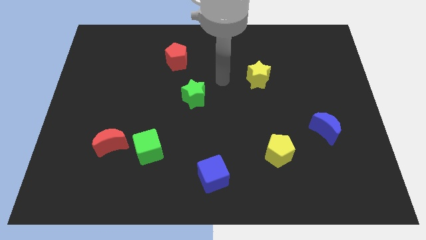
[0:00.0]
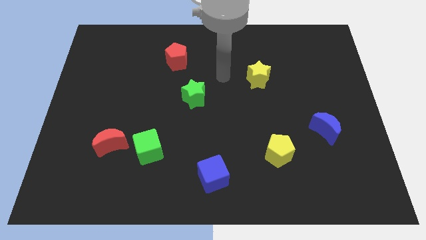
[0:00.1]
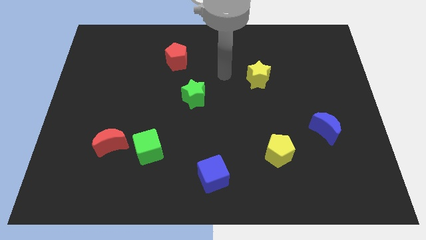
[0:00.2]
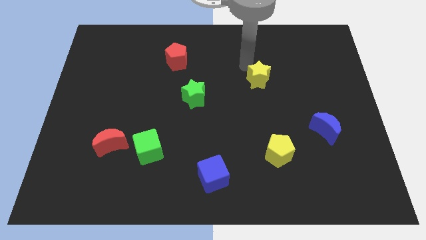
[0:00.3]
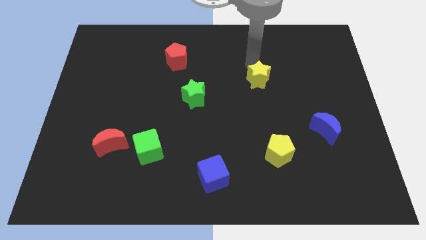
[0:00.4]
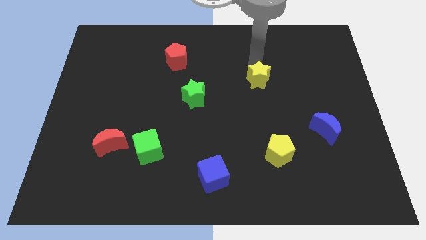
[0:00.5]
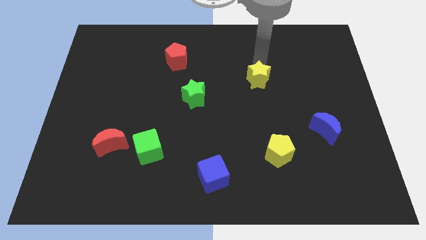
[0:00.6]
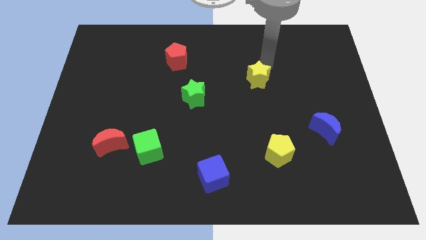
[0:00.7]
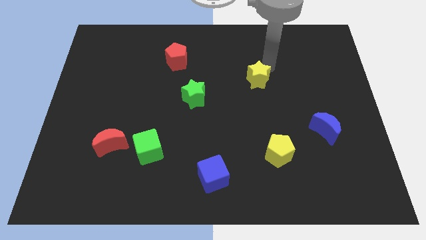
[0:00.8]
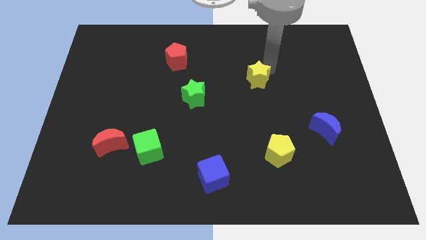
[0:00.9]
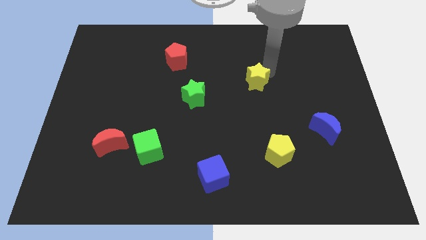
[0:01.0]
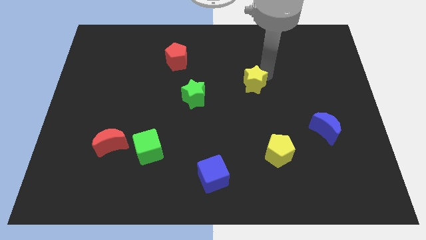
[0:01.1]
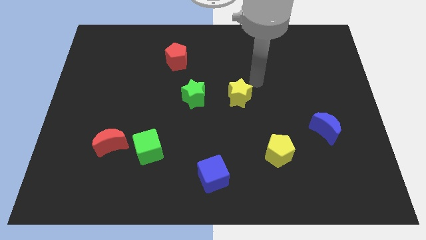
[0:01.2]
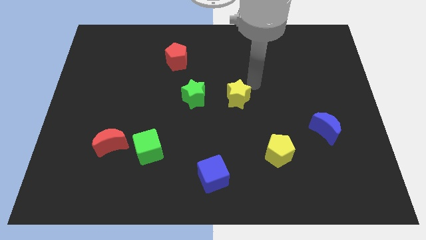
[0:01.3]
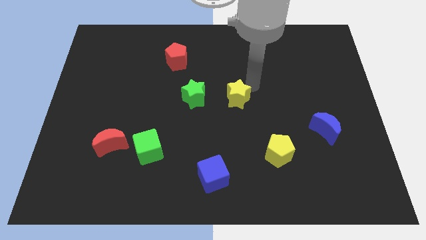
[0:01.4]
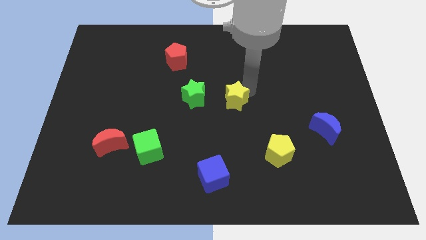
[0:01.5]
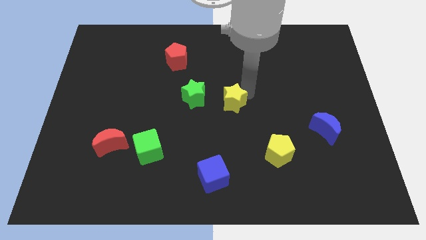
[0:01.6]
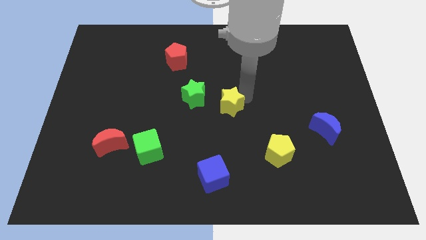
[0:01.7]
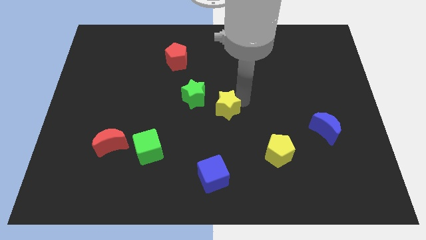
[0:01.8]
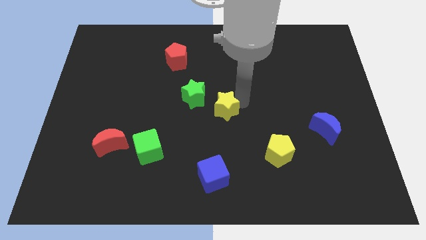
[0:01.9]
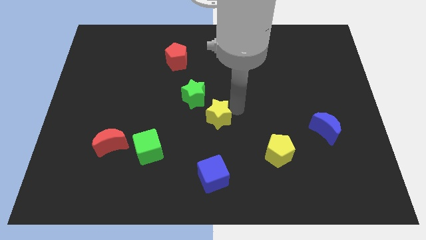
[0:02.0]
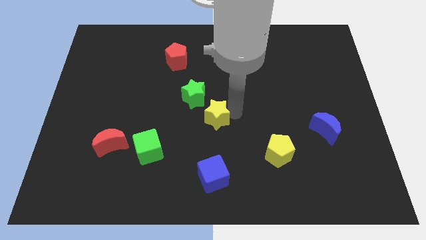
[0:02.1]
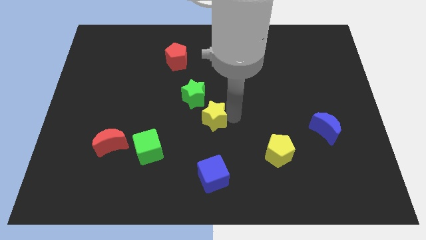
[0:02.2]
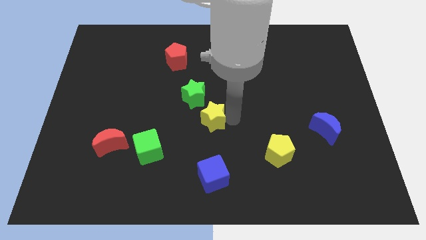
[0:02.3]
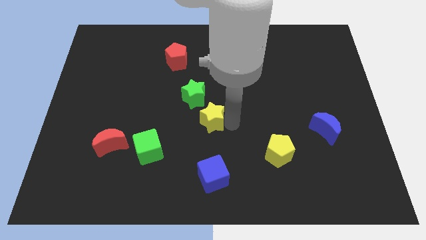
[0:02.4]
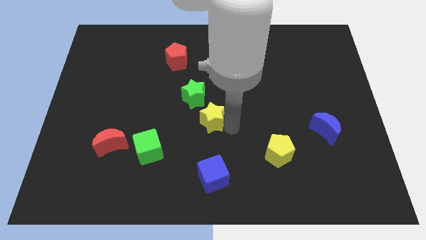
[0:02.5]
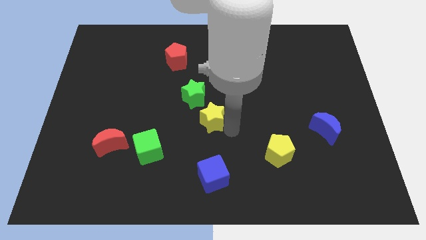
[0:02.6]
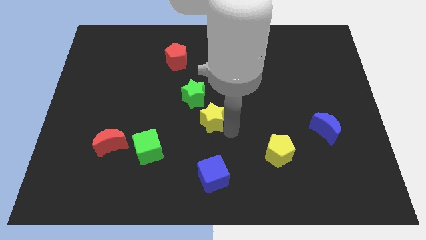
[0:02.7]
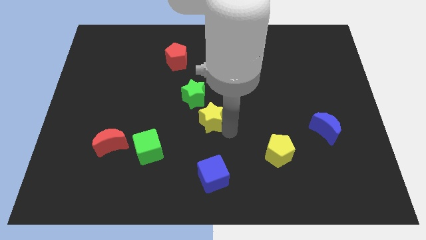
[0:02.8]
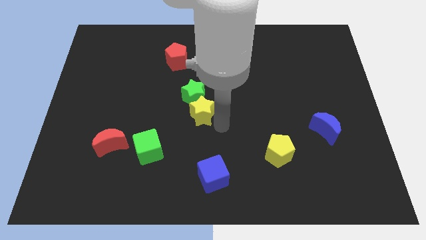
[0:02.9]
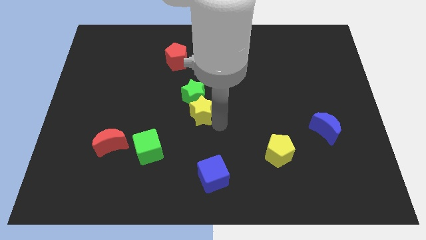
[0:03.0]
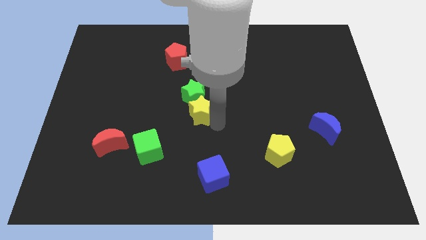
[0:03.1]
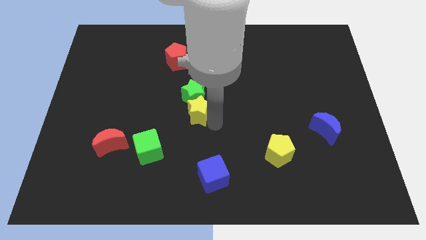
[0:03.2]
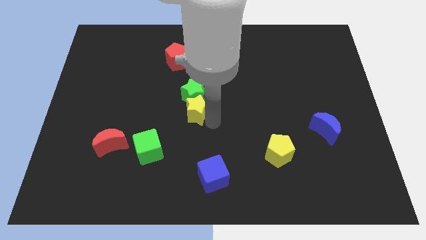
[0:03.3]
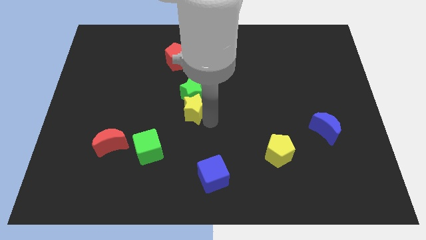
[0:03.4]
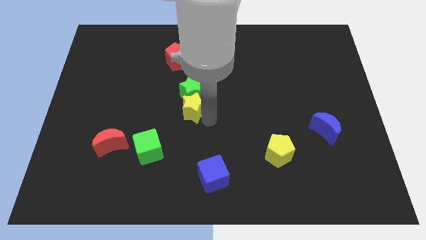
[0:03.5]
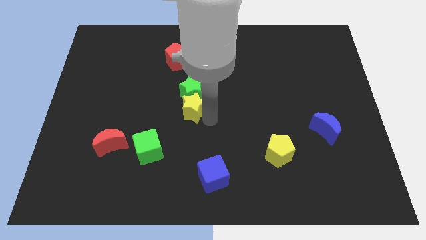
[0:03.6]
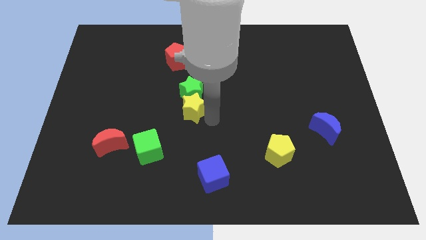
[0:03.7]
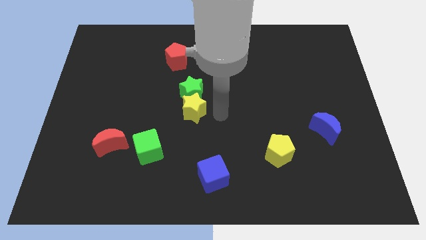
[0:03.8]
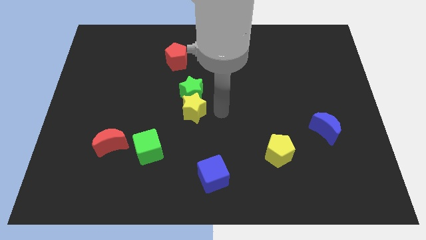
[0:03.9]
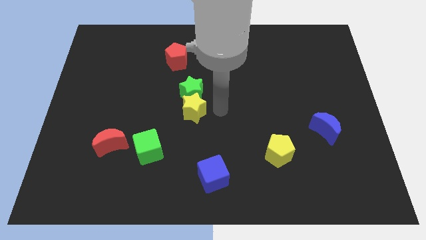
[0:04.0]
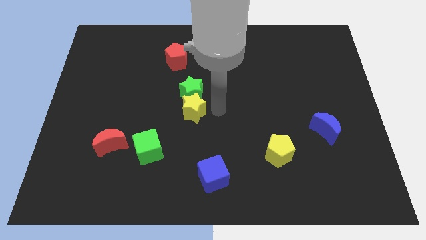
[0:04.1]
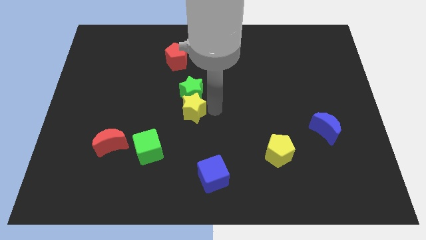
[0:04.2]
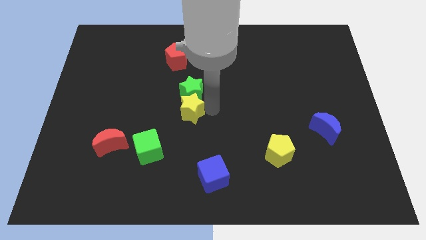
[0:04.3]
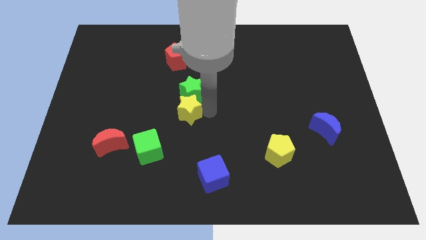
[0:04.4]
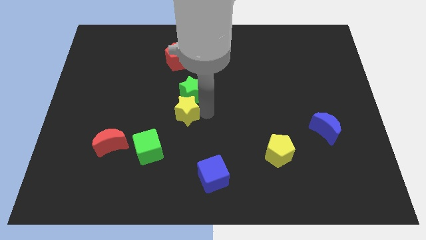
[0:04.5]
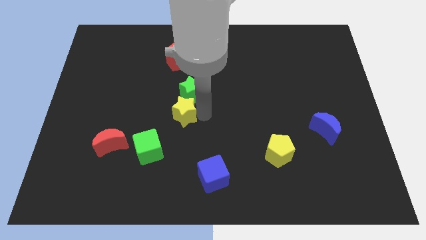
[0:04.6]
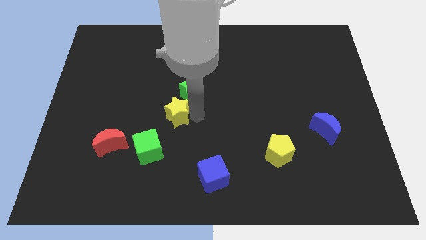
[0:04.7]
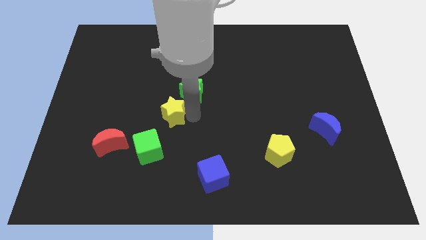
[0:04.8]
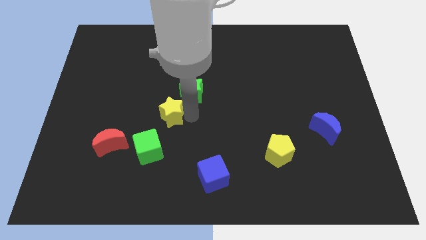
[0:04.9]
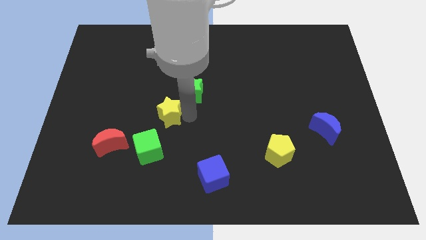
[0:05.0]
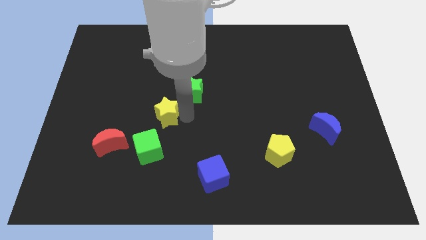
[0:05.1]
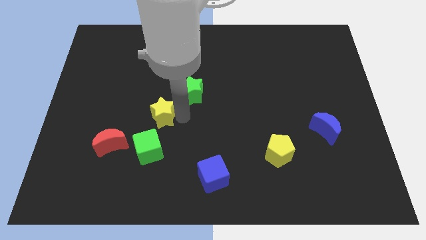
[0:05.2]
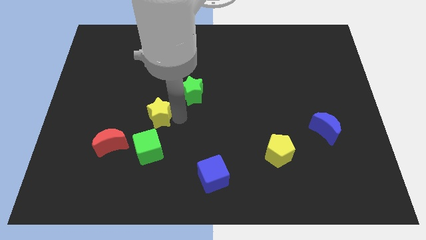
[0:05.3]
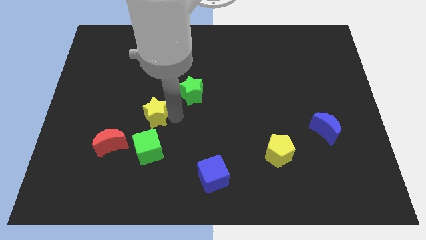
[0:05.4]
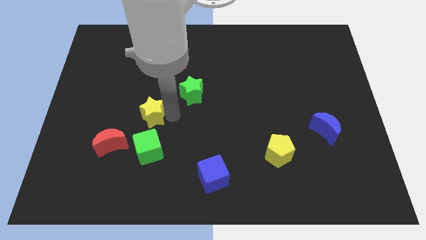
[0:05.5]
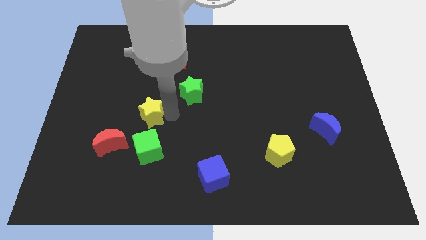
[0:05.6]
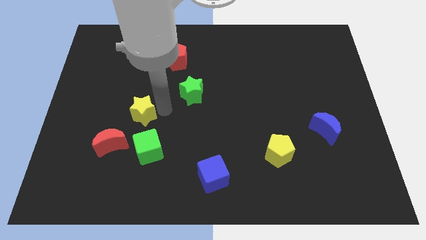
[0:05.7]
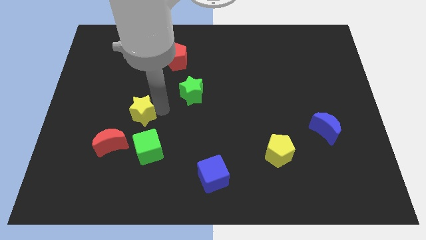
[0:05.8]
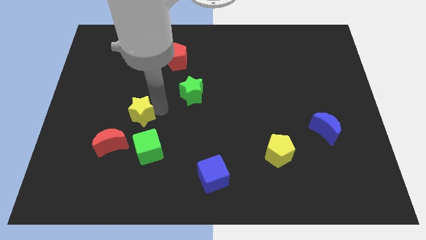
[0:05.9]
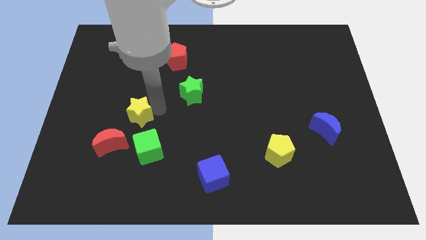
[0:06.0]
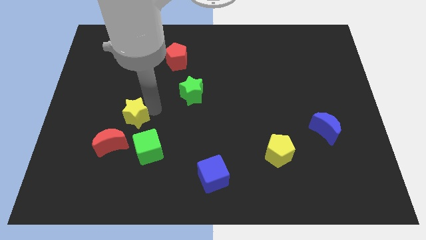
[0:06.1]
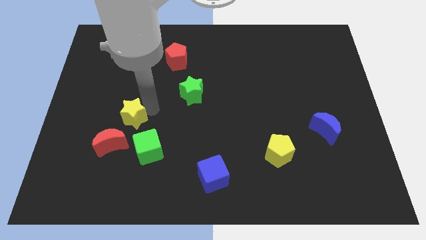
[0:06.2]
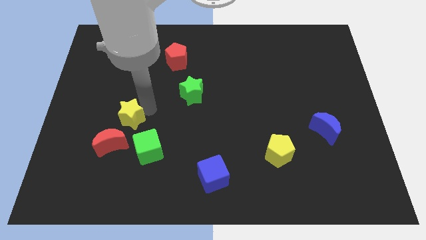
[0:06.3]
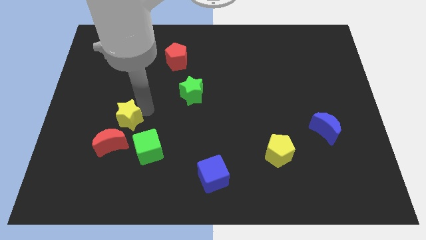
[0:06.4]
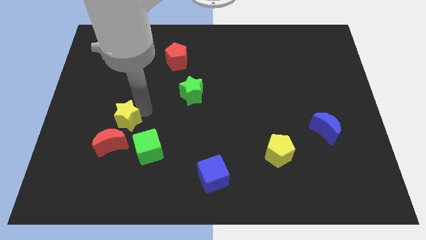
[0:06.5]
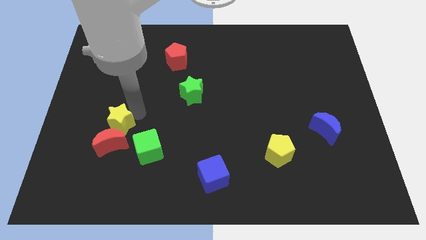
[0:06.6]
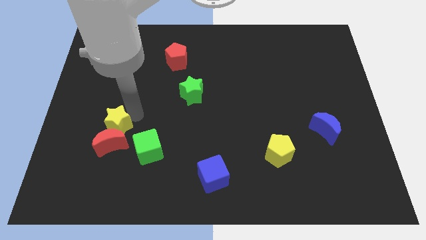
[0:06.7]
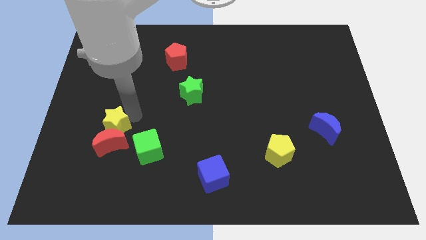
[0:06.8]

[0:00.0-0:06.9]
move the yellow star towards the red moon

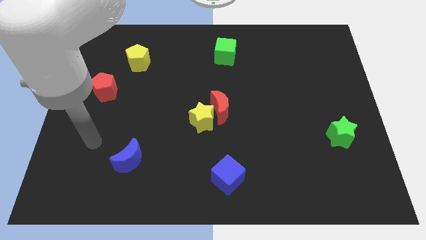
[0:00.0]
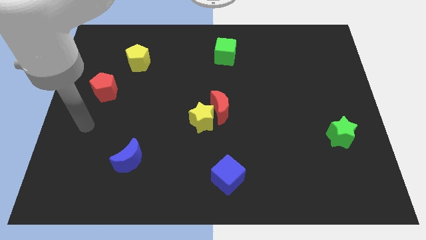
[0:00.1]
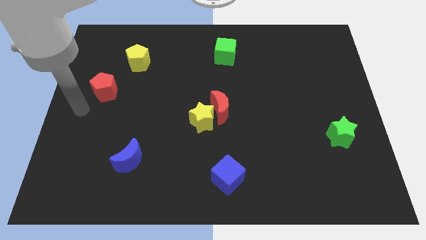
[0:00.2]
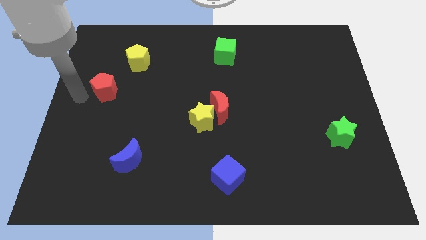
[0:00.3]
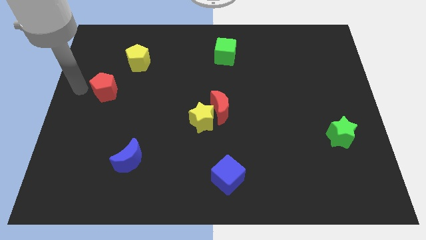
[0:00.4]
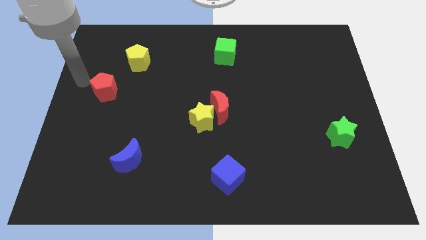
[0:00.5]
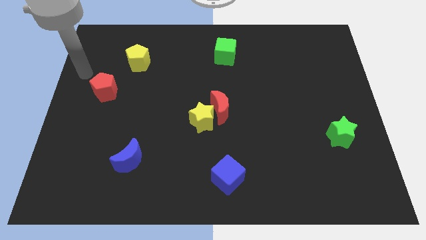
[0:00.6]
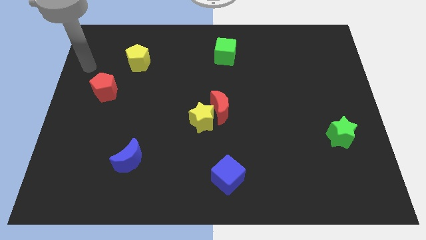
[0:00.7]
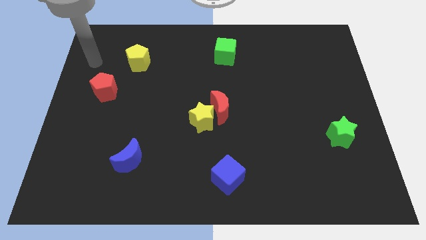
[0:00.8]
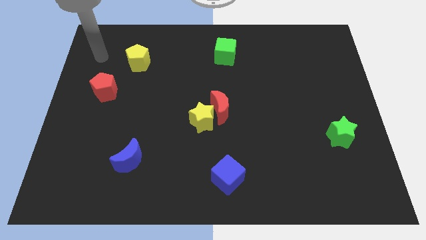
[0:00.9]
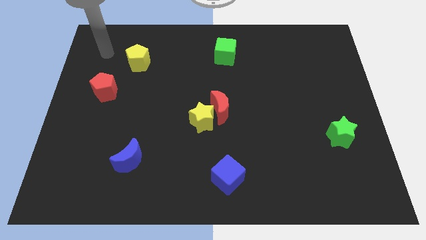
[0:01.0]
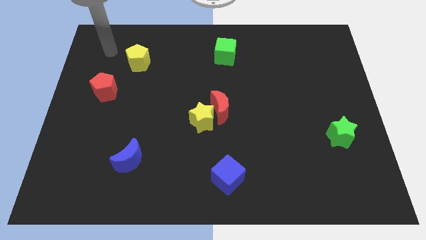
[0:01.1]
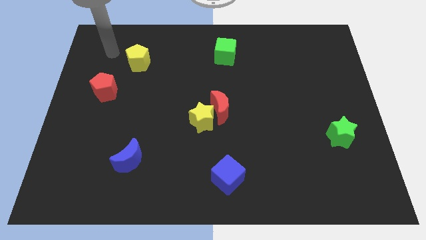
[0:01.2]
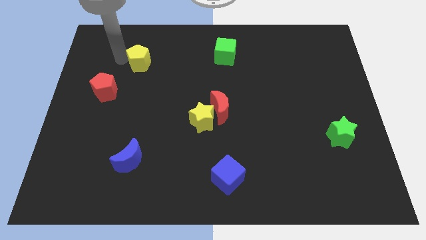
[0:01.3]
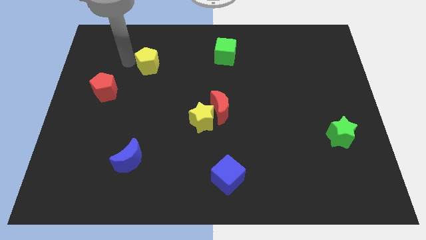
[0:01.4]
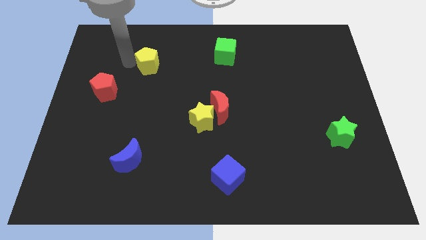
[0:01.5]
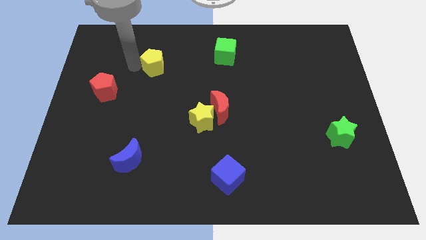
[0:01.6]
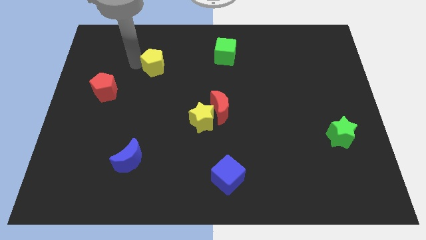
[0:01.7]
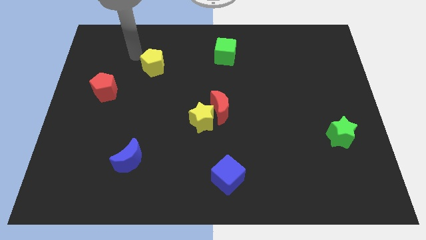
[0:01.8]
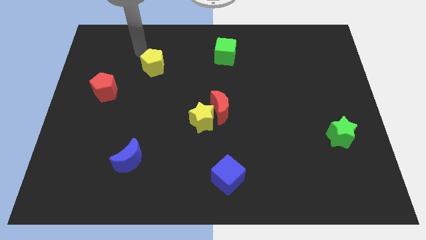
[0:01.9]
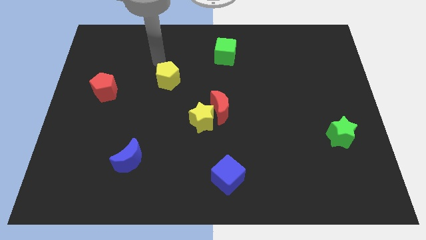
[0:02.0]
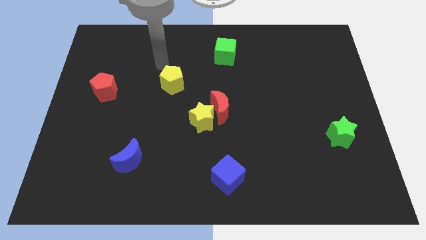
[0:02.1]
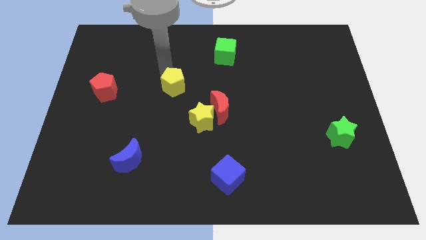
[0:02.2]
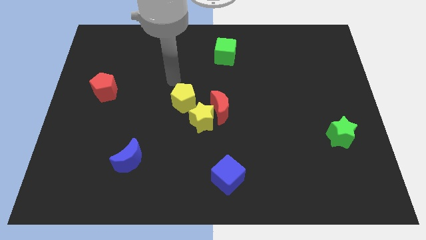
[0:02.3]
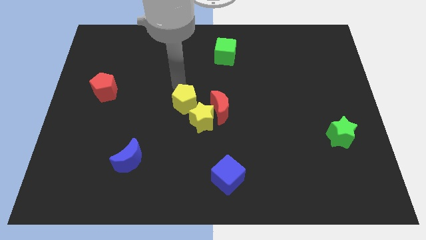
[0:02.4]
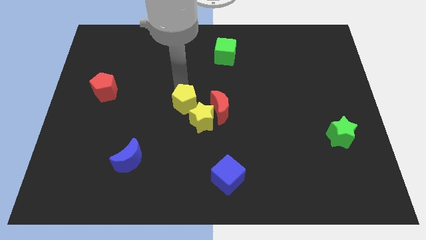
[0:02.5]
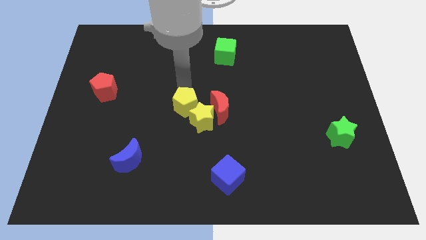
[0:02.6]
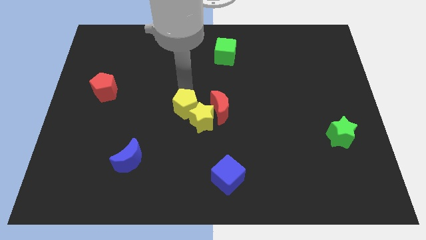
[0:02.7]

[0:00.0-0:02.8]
slide the yellow pentagon close to the yellow star
